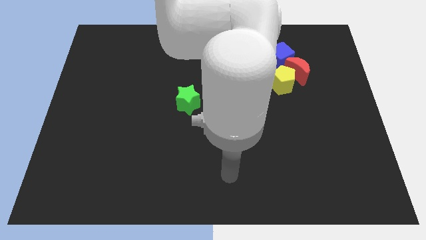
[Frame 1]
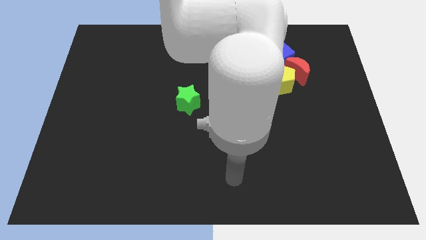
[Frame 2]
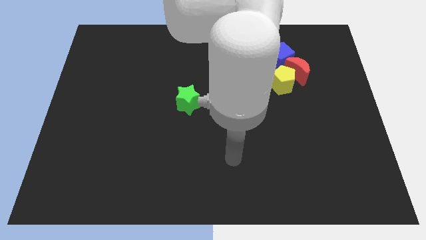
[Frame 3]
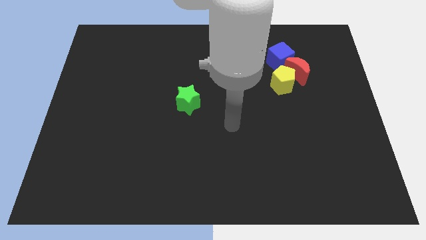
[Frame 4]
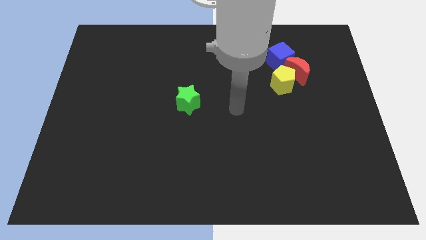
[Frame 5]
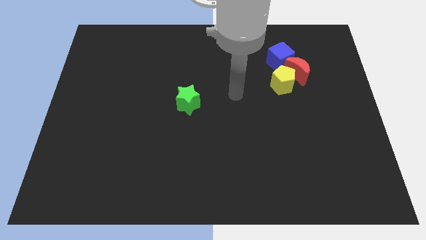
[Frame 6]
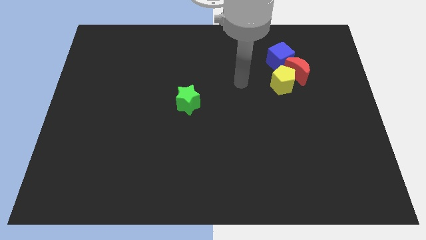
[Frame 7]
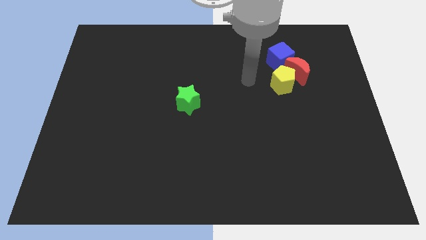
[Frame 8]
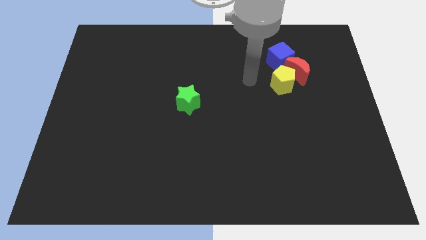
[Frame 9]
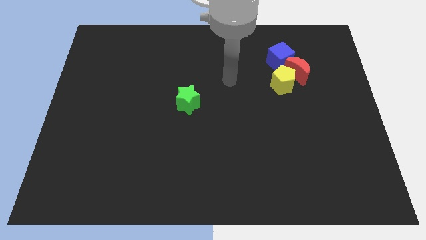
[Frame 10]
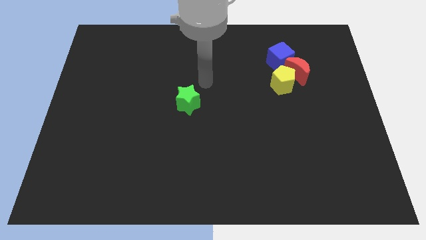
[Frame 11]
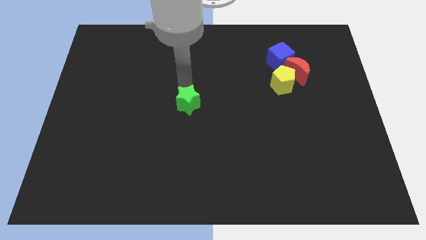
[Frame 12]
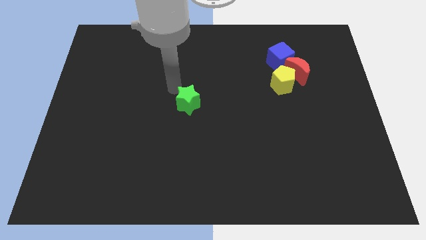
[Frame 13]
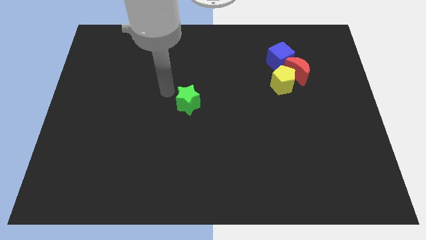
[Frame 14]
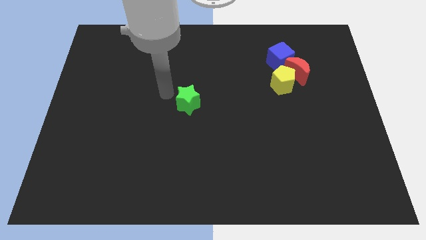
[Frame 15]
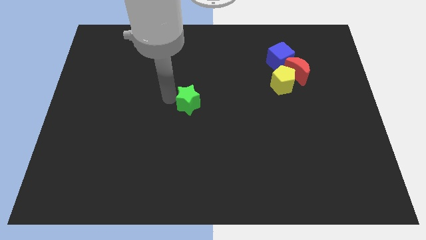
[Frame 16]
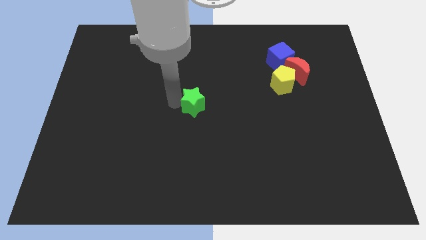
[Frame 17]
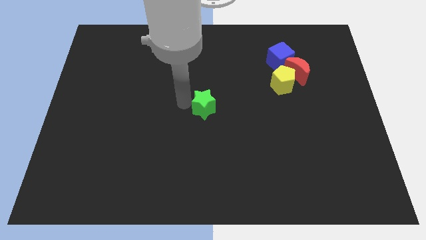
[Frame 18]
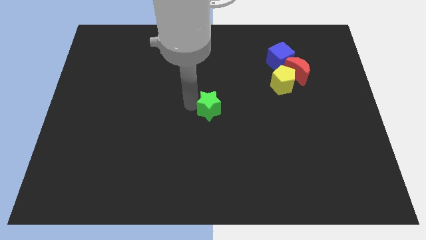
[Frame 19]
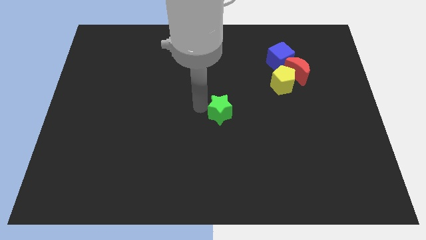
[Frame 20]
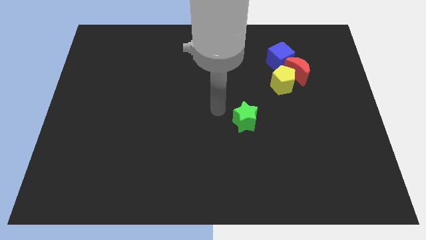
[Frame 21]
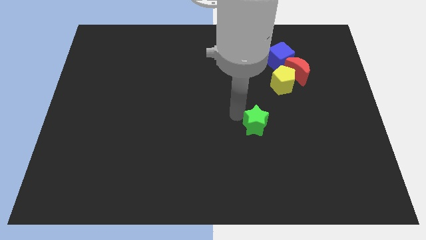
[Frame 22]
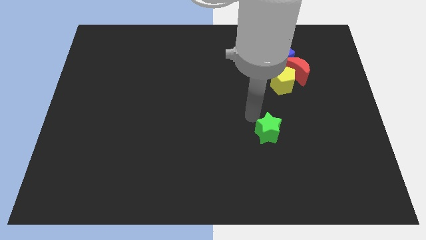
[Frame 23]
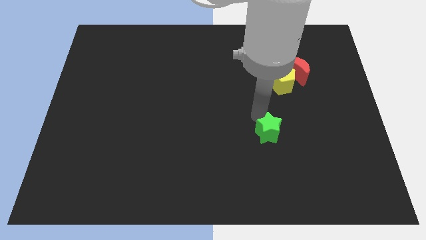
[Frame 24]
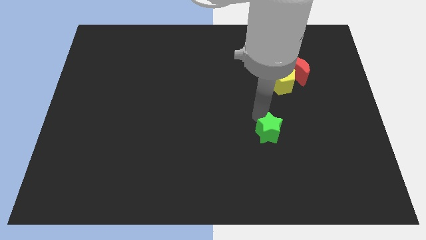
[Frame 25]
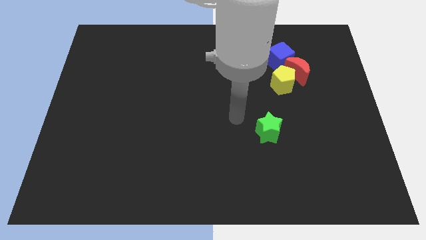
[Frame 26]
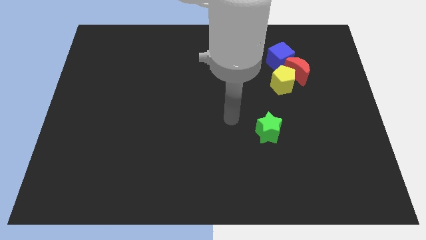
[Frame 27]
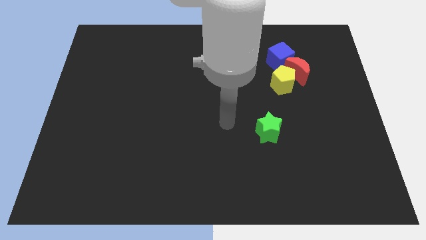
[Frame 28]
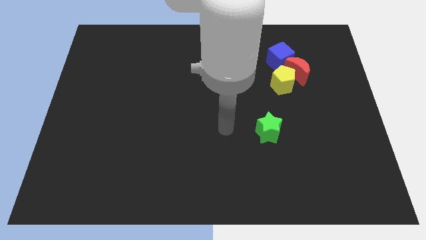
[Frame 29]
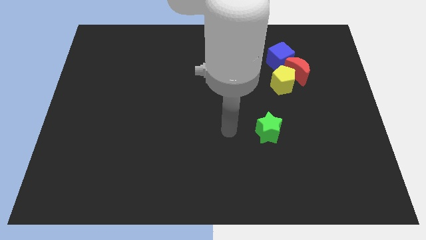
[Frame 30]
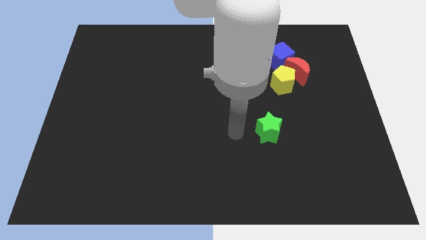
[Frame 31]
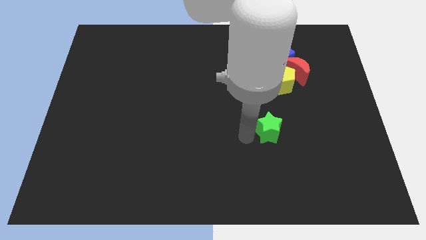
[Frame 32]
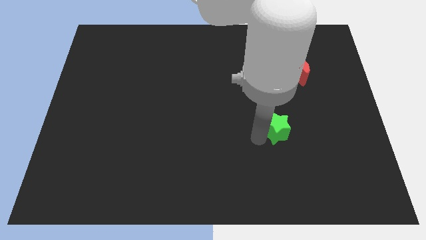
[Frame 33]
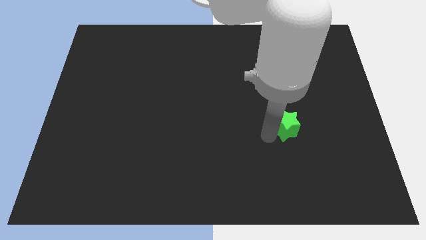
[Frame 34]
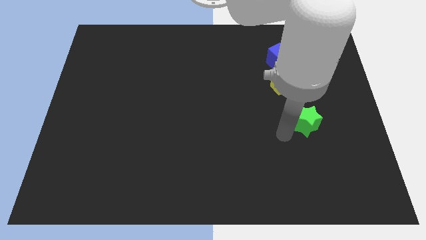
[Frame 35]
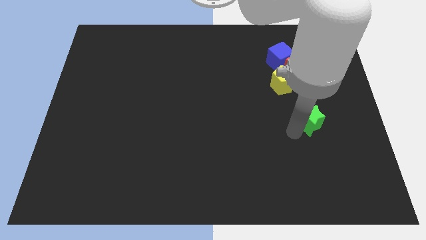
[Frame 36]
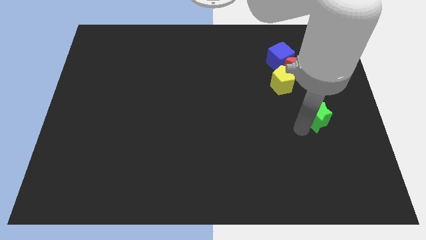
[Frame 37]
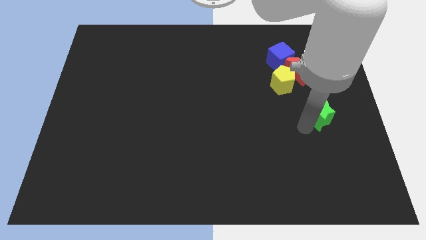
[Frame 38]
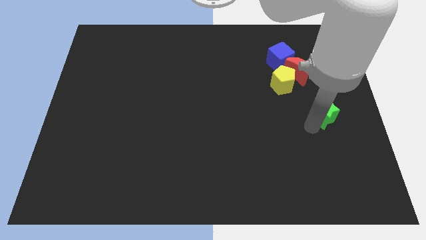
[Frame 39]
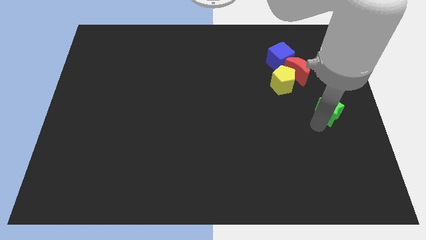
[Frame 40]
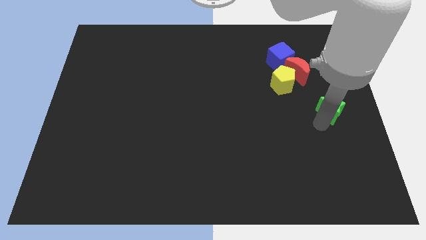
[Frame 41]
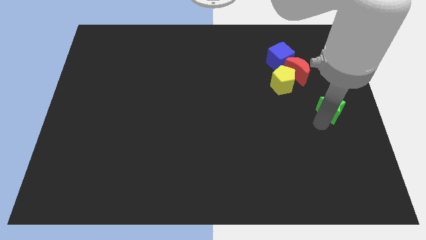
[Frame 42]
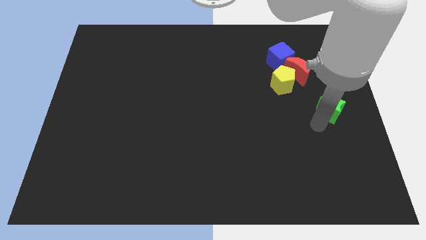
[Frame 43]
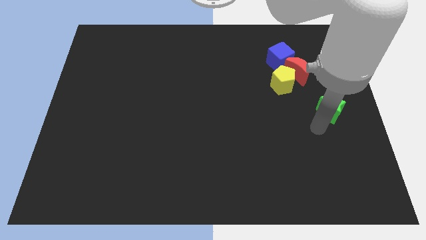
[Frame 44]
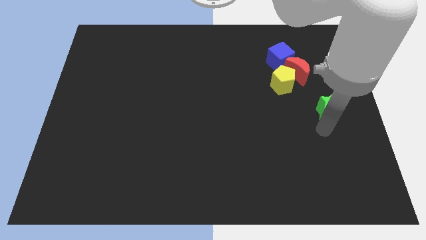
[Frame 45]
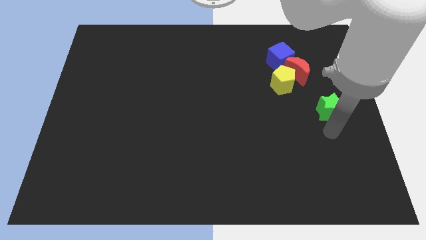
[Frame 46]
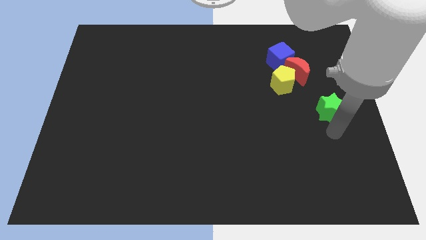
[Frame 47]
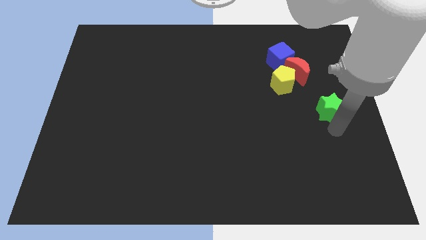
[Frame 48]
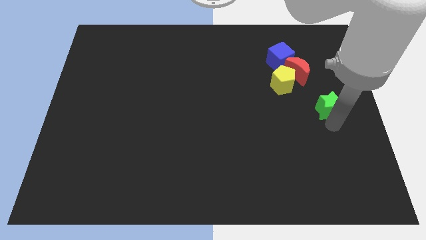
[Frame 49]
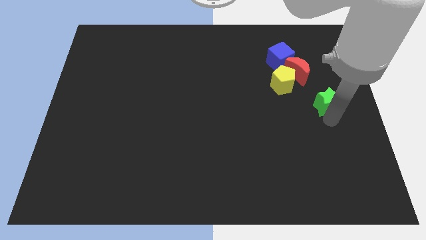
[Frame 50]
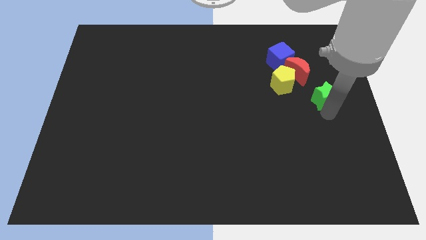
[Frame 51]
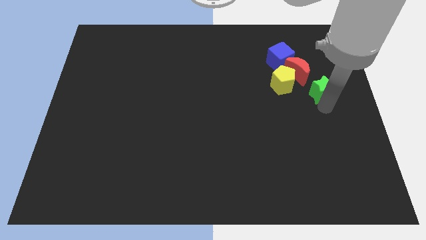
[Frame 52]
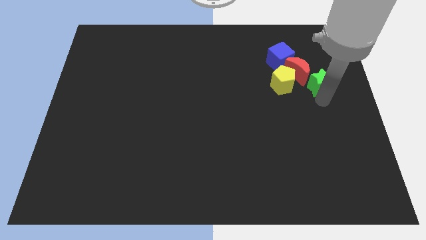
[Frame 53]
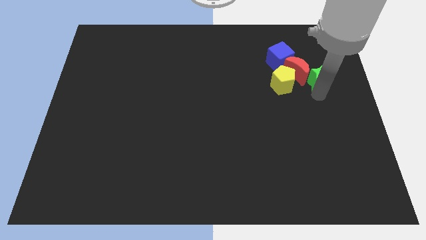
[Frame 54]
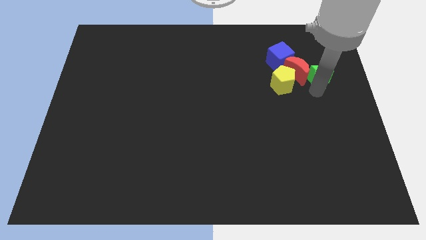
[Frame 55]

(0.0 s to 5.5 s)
slide the green star to the red moon

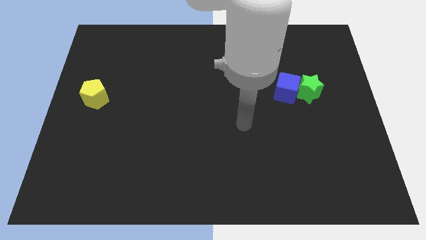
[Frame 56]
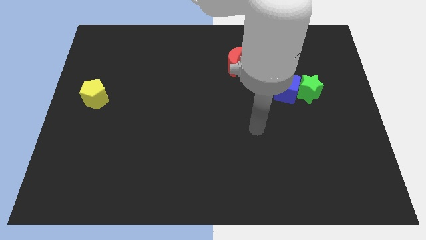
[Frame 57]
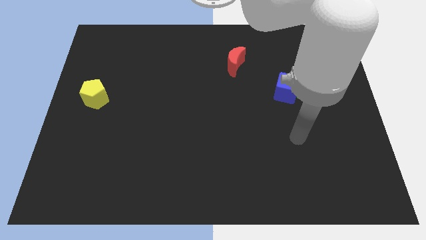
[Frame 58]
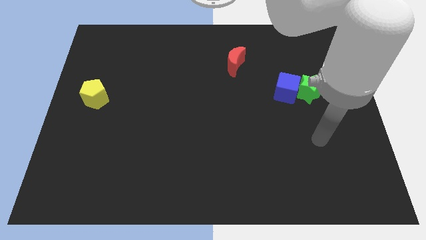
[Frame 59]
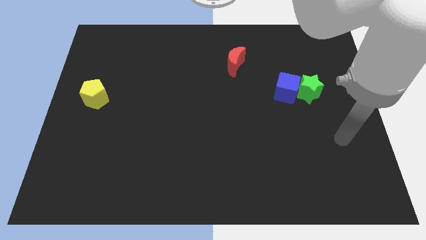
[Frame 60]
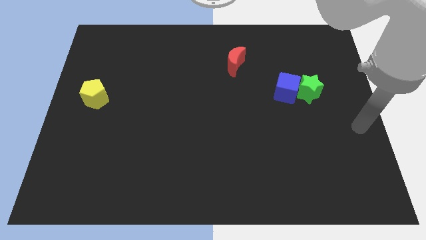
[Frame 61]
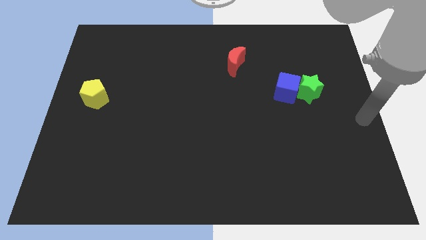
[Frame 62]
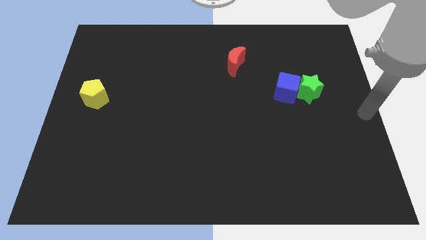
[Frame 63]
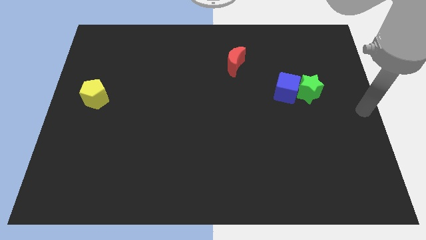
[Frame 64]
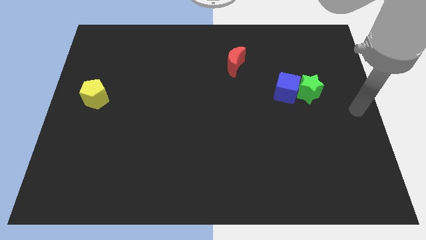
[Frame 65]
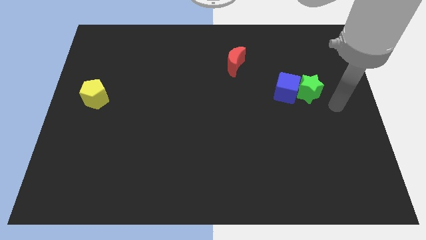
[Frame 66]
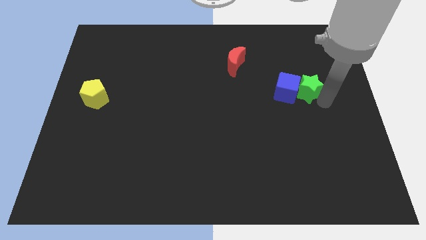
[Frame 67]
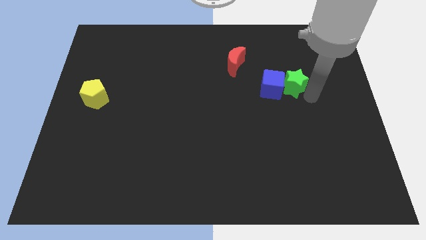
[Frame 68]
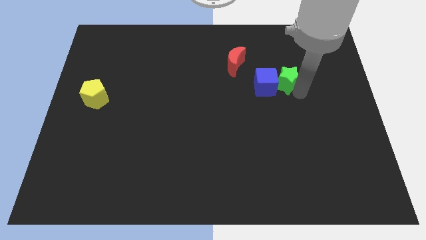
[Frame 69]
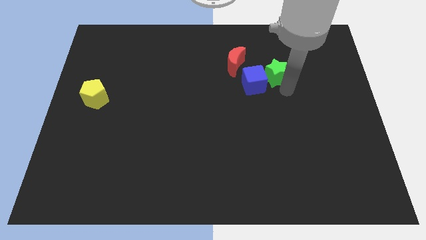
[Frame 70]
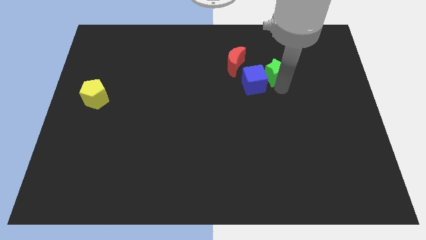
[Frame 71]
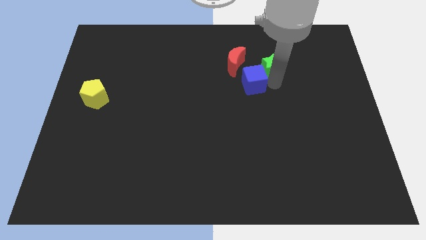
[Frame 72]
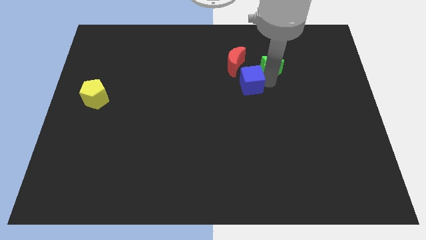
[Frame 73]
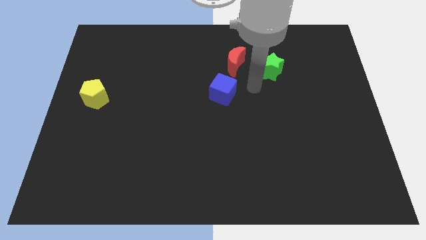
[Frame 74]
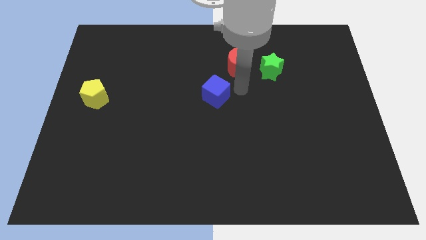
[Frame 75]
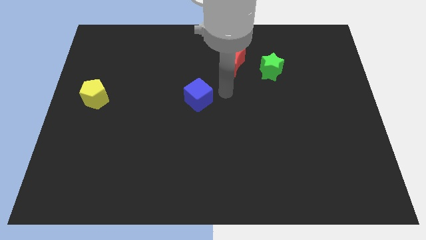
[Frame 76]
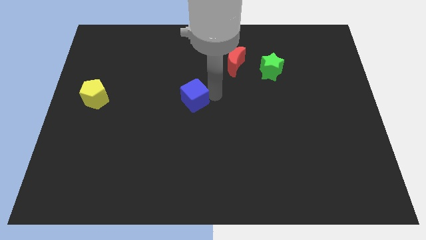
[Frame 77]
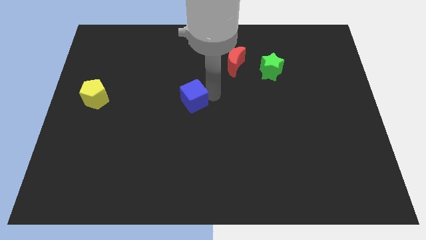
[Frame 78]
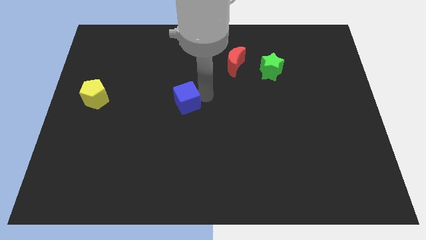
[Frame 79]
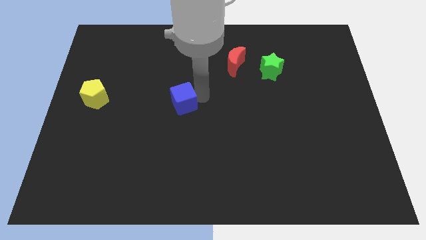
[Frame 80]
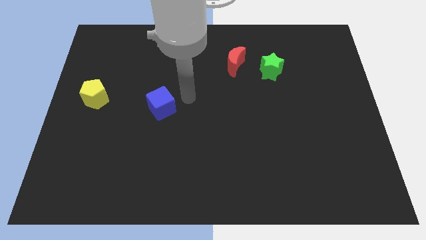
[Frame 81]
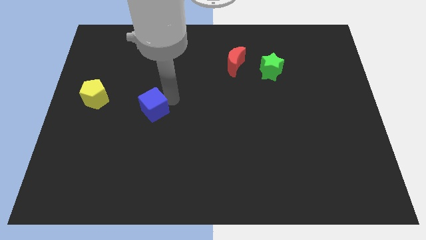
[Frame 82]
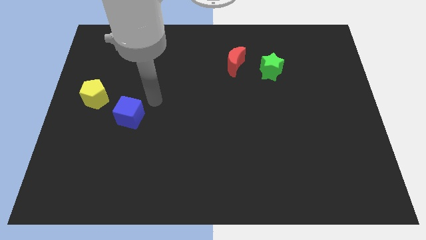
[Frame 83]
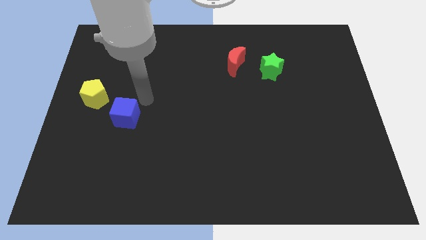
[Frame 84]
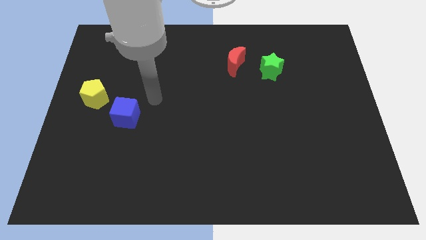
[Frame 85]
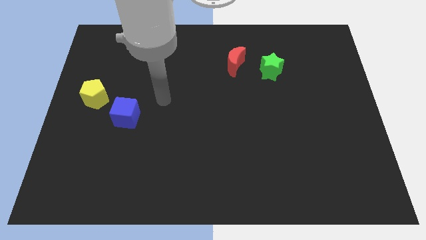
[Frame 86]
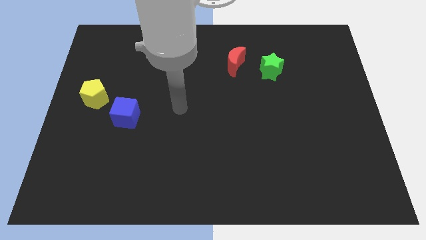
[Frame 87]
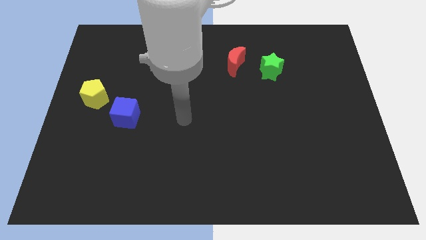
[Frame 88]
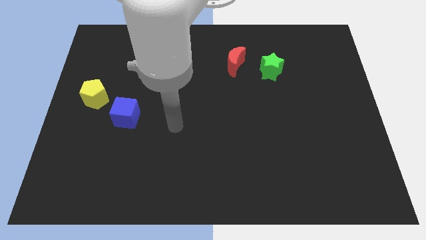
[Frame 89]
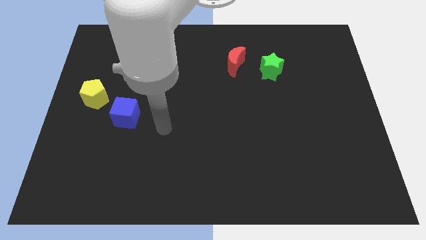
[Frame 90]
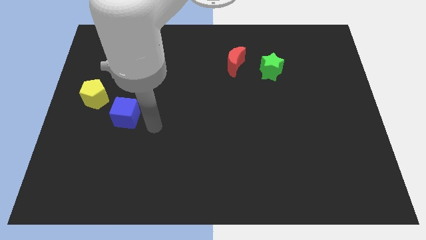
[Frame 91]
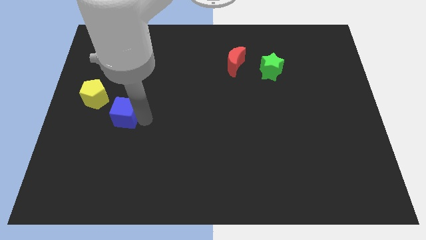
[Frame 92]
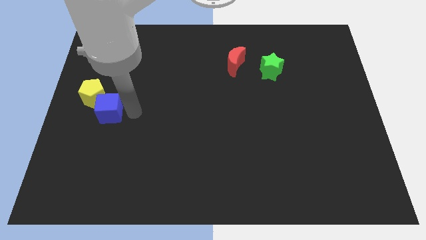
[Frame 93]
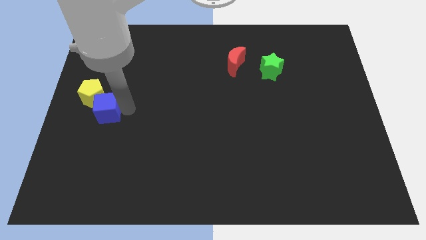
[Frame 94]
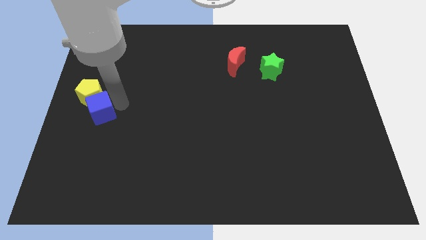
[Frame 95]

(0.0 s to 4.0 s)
put the blue block close to the pentagon
